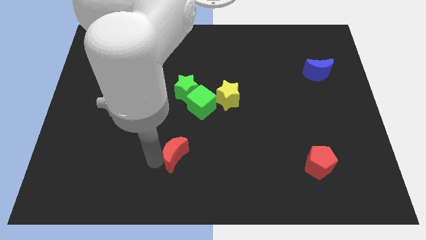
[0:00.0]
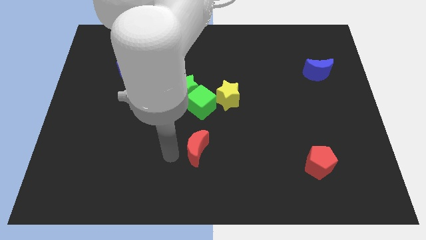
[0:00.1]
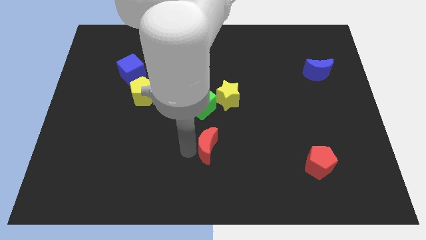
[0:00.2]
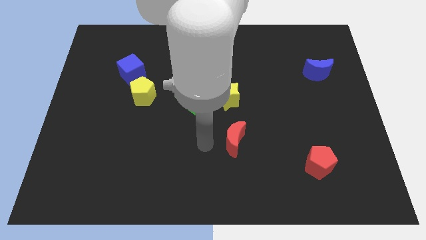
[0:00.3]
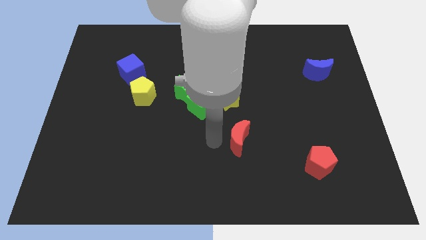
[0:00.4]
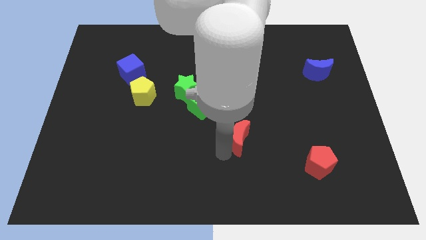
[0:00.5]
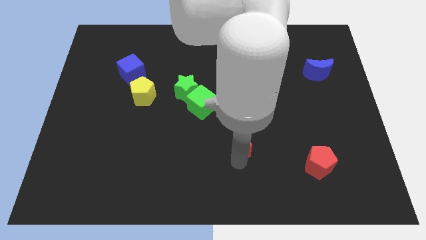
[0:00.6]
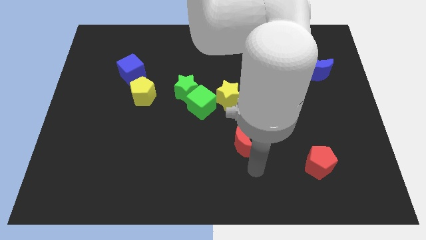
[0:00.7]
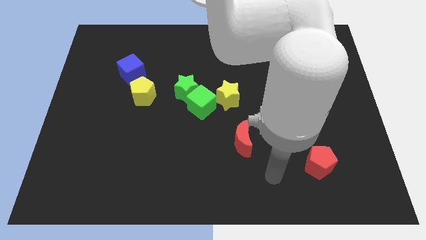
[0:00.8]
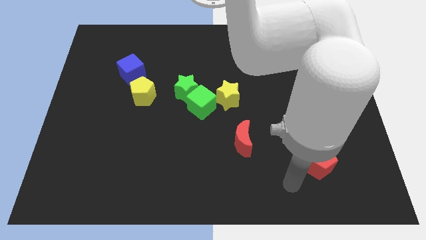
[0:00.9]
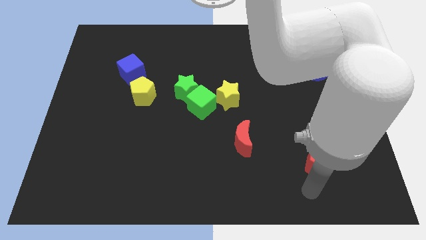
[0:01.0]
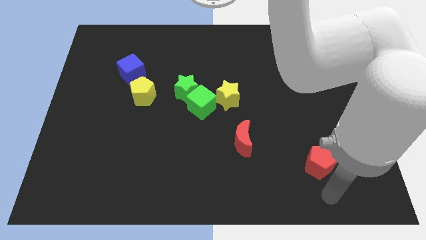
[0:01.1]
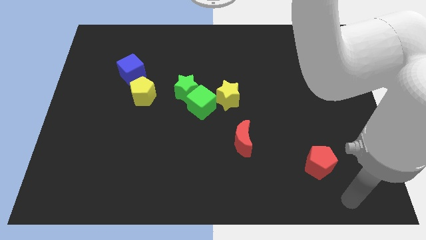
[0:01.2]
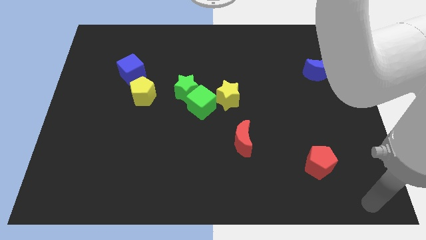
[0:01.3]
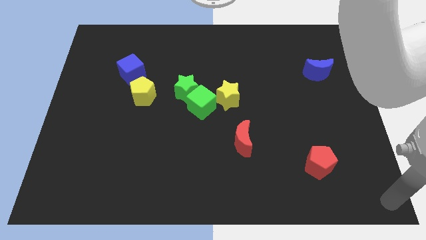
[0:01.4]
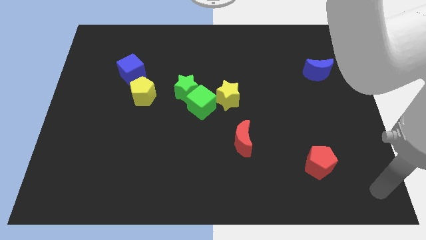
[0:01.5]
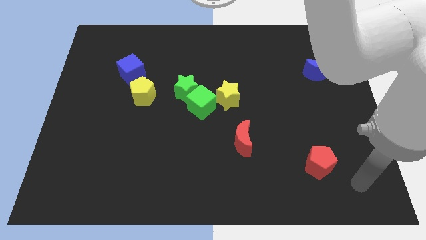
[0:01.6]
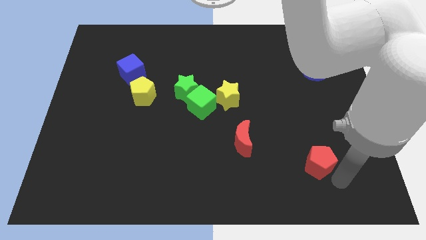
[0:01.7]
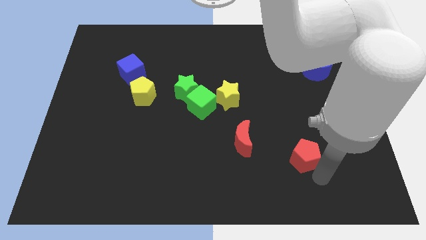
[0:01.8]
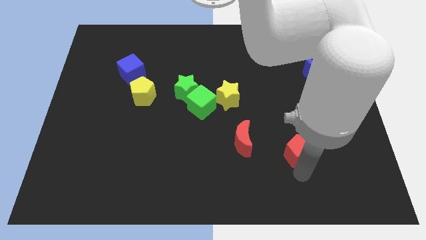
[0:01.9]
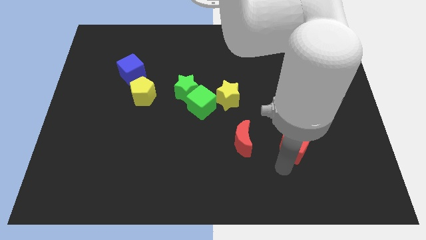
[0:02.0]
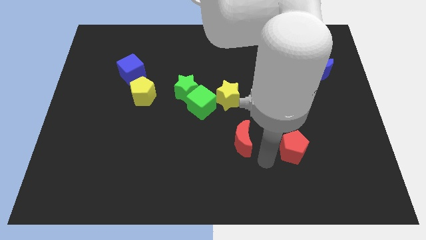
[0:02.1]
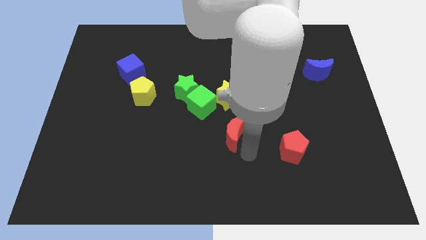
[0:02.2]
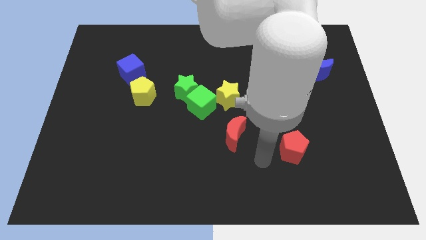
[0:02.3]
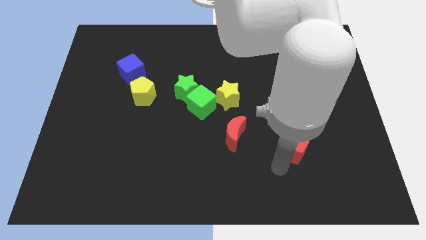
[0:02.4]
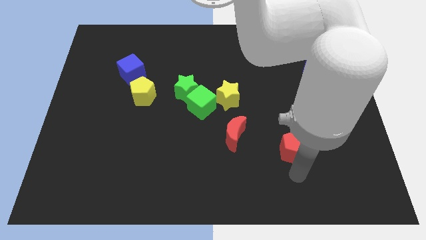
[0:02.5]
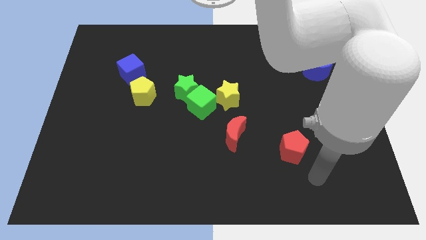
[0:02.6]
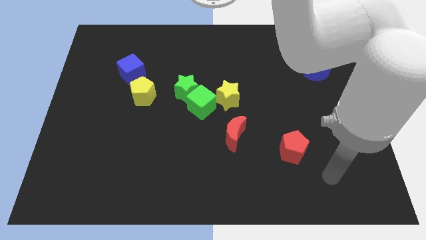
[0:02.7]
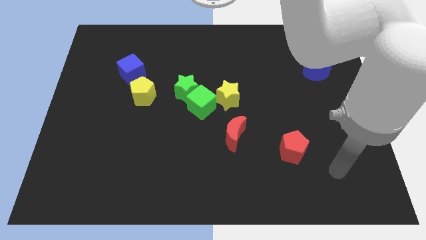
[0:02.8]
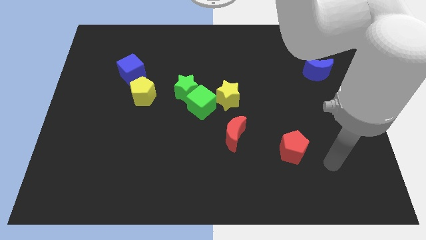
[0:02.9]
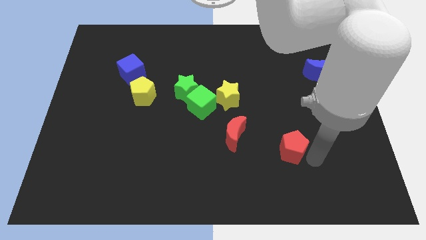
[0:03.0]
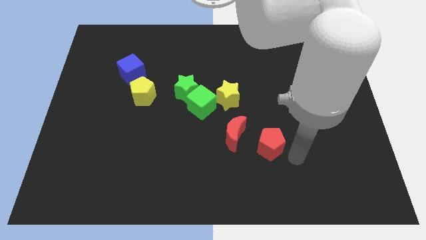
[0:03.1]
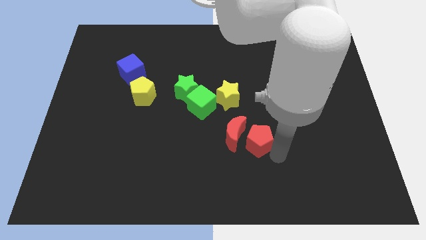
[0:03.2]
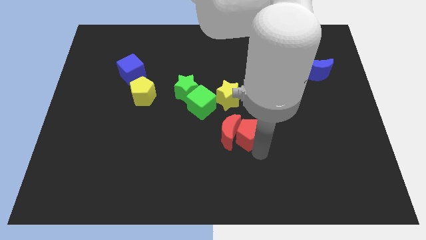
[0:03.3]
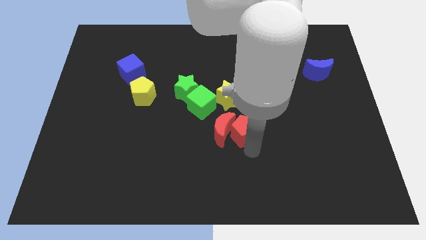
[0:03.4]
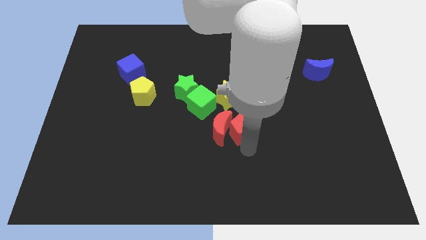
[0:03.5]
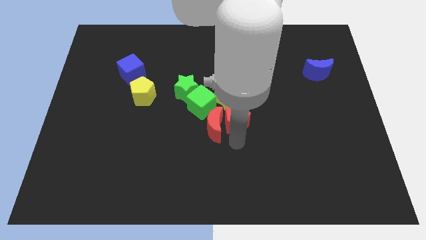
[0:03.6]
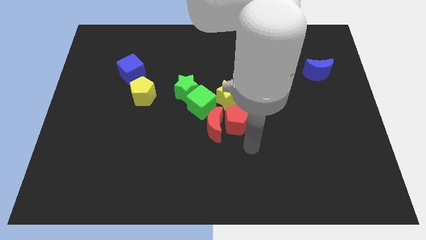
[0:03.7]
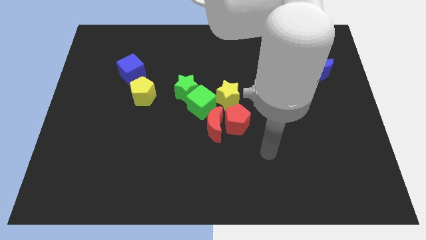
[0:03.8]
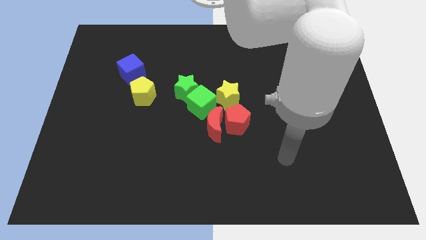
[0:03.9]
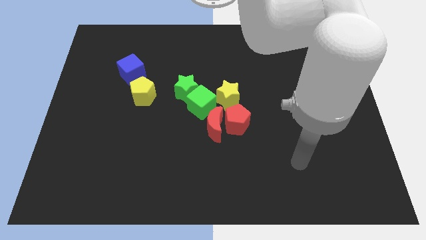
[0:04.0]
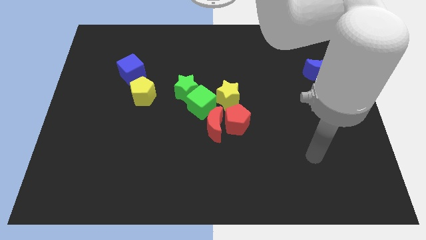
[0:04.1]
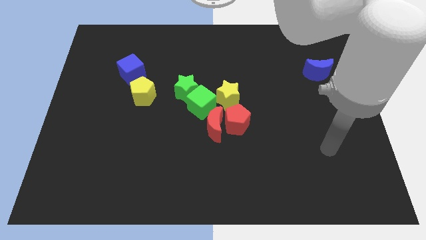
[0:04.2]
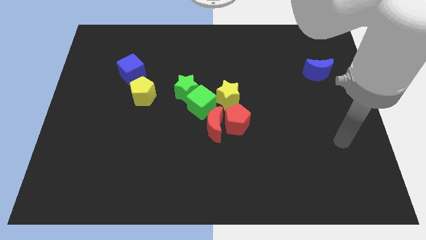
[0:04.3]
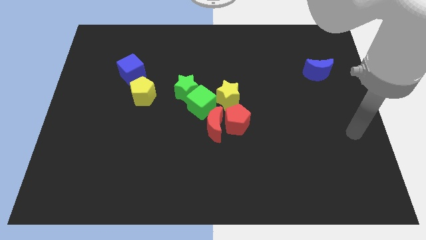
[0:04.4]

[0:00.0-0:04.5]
move the red pentagon and red crescent to the bottom of the yellow star

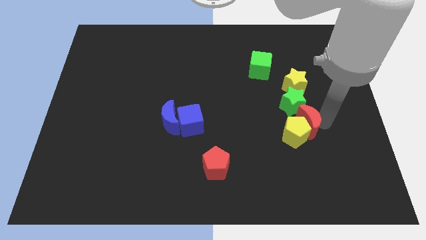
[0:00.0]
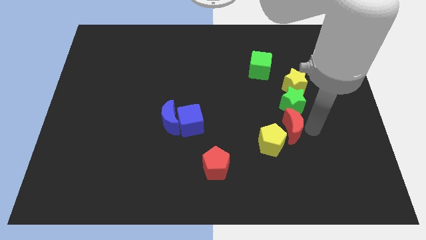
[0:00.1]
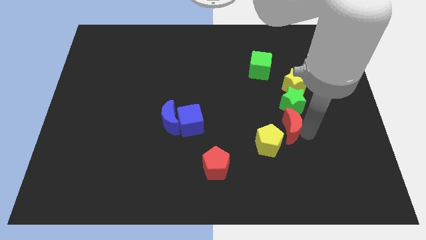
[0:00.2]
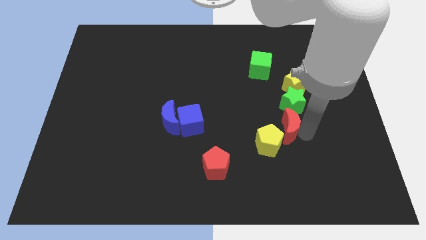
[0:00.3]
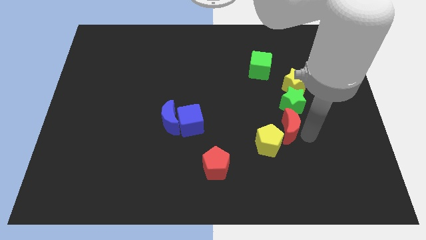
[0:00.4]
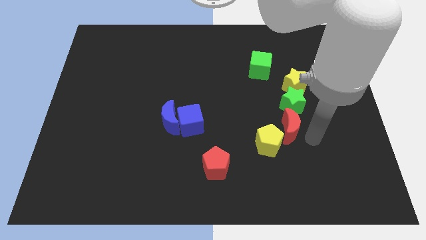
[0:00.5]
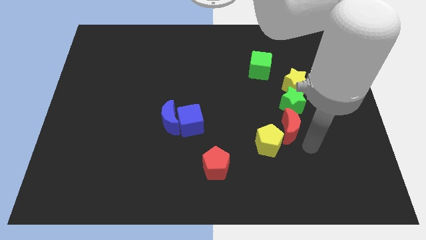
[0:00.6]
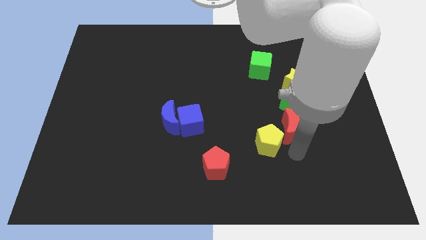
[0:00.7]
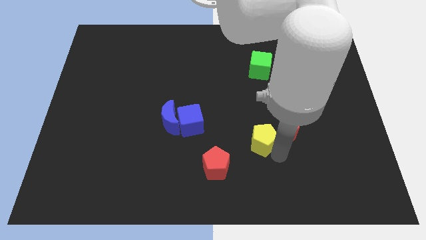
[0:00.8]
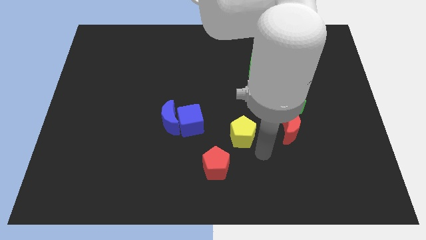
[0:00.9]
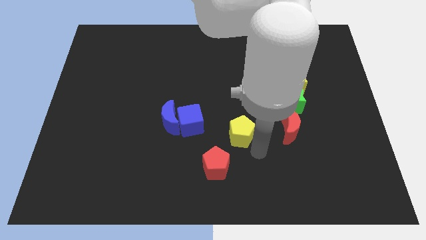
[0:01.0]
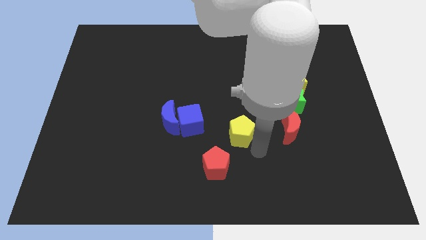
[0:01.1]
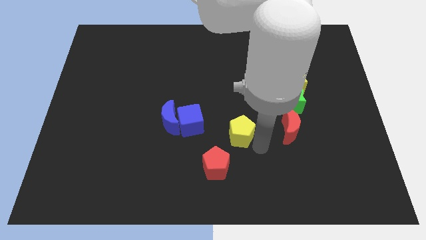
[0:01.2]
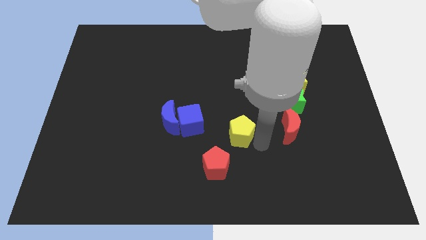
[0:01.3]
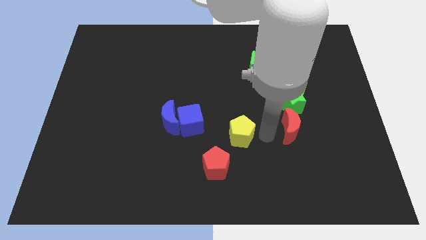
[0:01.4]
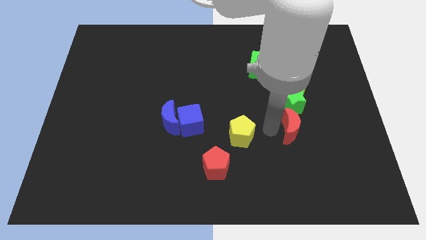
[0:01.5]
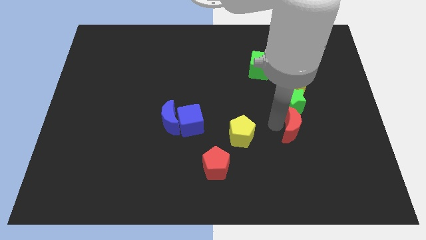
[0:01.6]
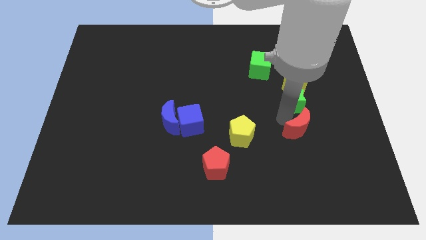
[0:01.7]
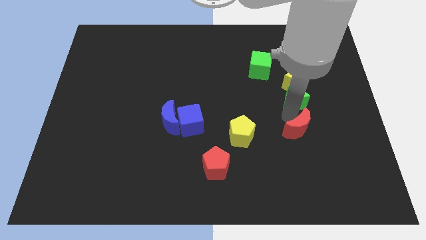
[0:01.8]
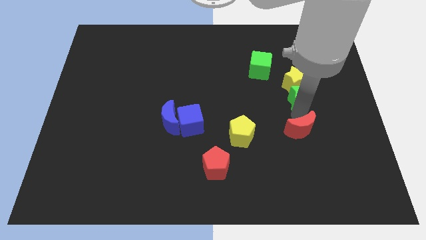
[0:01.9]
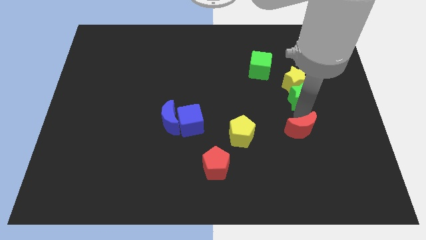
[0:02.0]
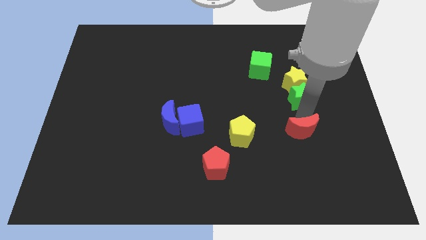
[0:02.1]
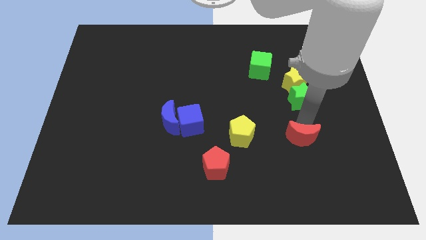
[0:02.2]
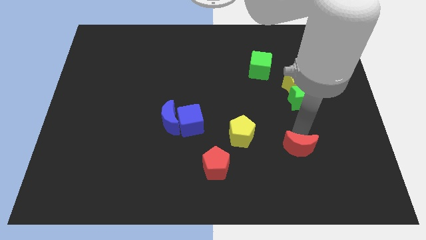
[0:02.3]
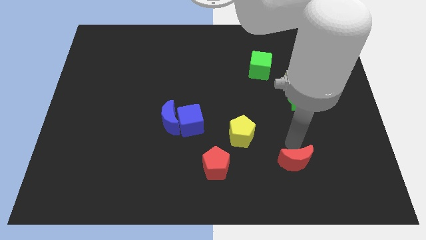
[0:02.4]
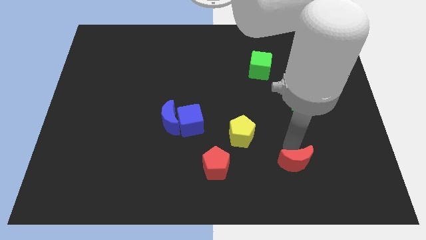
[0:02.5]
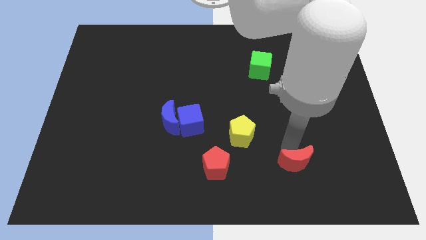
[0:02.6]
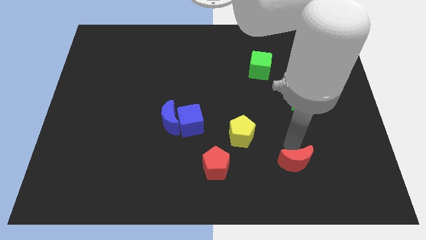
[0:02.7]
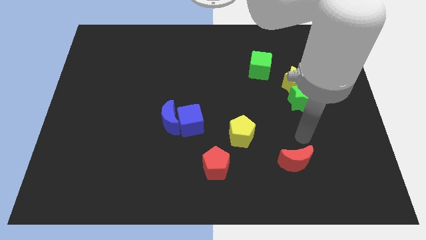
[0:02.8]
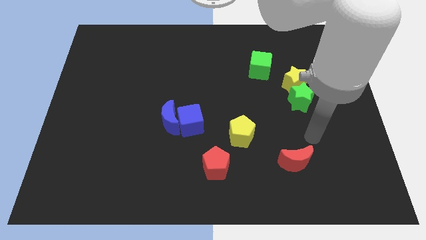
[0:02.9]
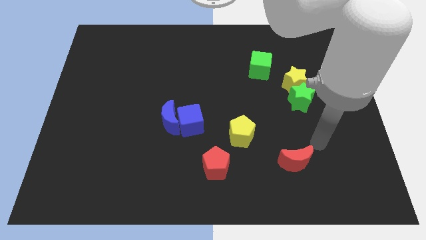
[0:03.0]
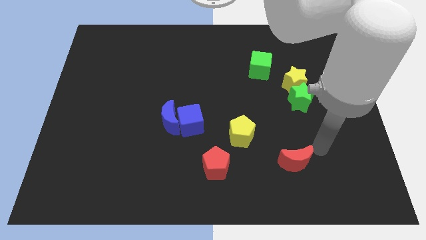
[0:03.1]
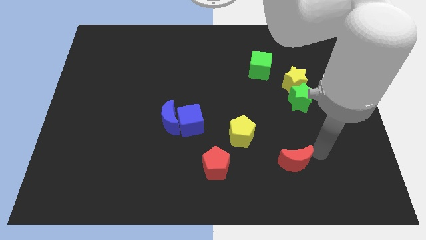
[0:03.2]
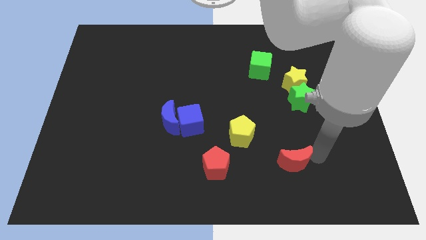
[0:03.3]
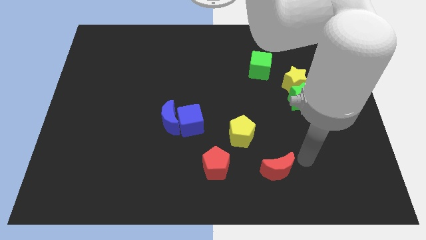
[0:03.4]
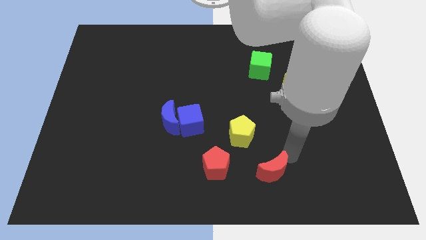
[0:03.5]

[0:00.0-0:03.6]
separate yellow pentagon from red crescent

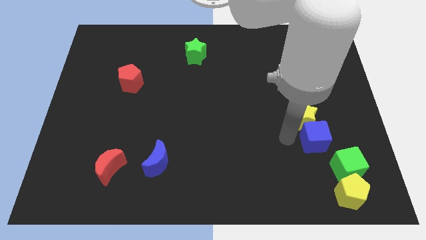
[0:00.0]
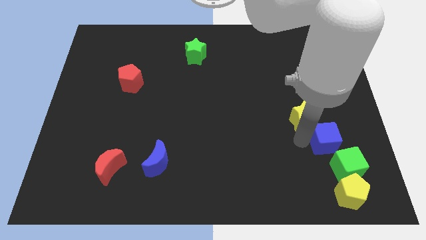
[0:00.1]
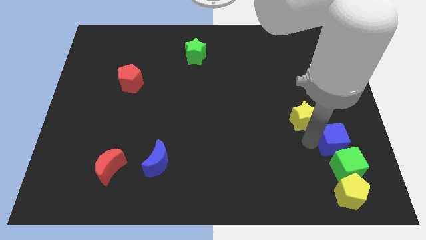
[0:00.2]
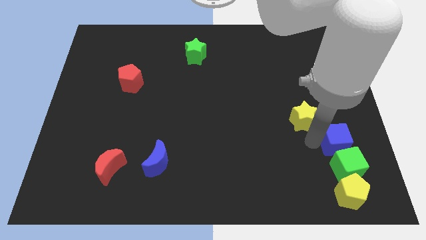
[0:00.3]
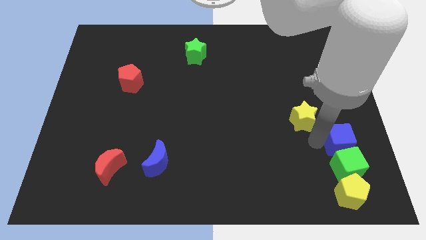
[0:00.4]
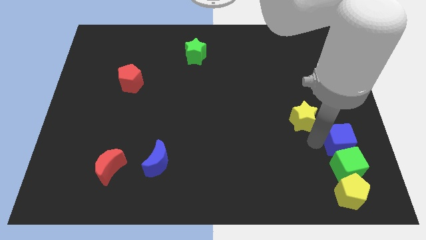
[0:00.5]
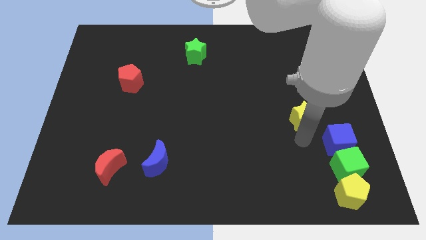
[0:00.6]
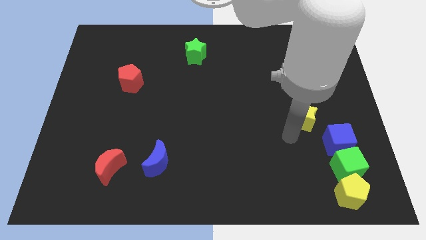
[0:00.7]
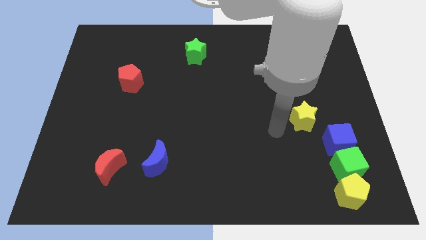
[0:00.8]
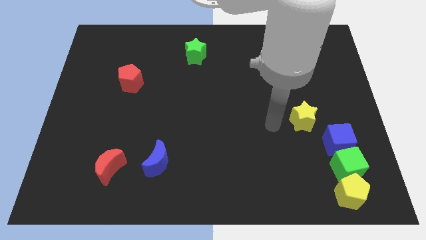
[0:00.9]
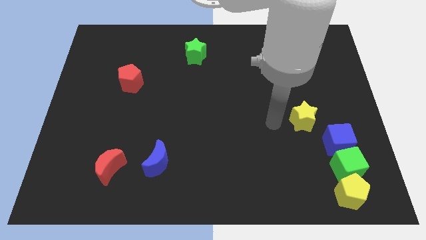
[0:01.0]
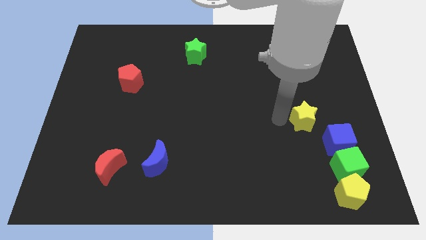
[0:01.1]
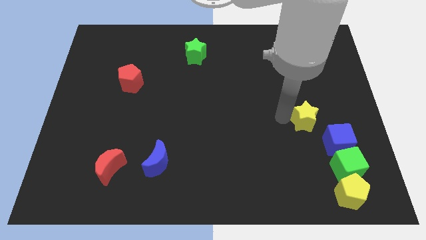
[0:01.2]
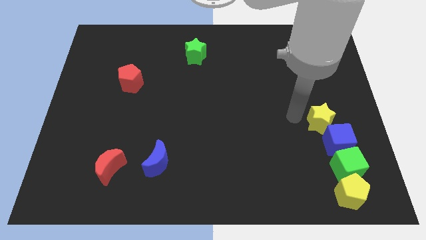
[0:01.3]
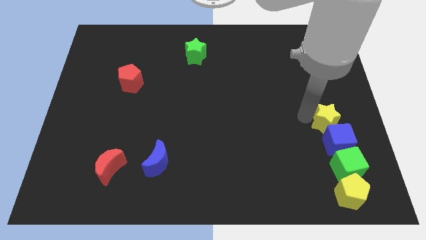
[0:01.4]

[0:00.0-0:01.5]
move blocks slightly to right bottom to form a vertical line
